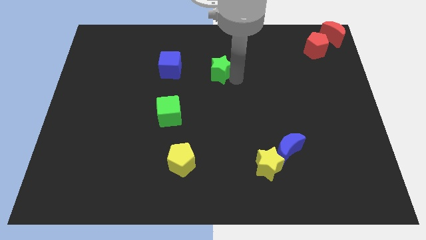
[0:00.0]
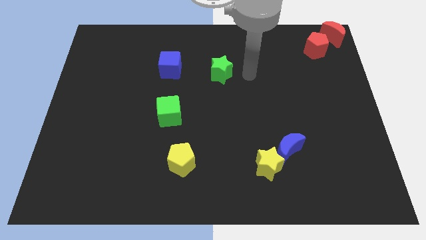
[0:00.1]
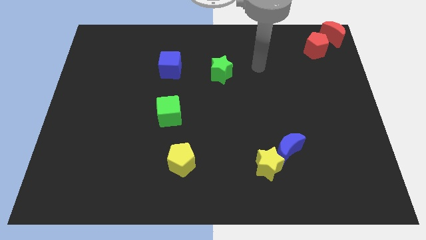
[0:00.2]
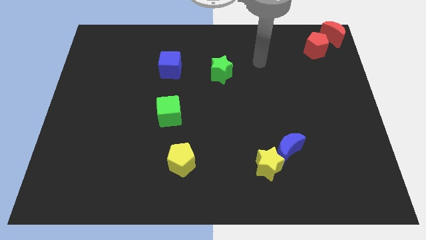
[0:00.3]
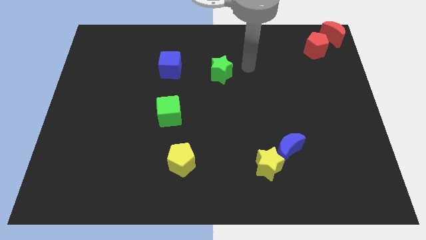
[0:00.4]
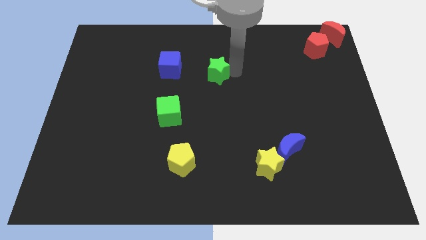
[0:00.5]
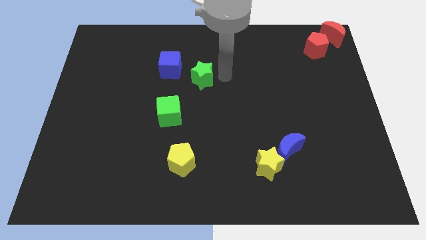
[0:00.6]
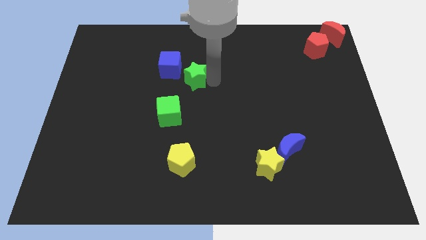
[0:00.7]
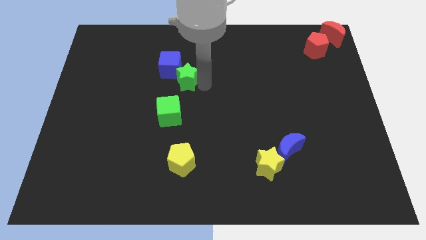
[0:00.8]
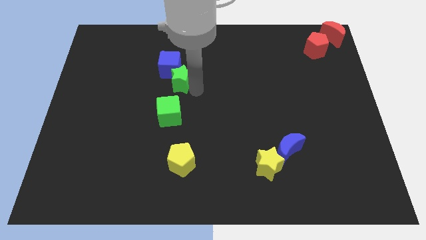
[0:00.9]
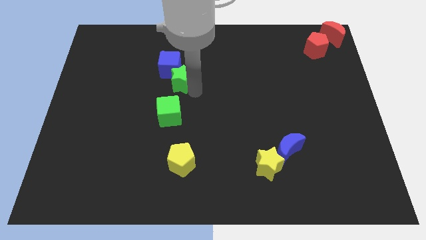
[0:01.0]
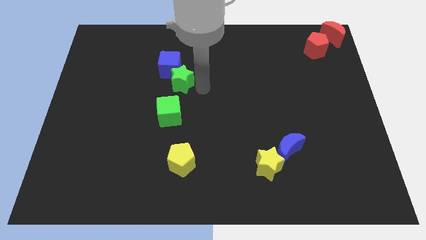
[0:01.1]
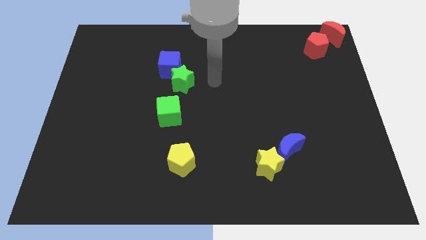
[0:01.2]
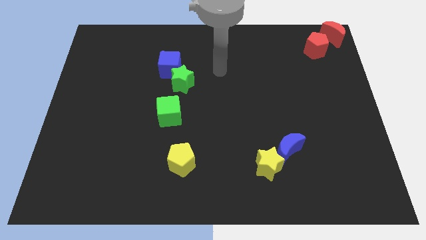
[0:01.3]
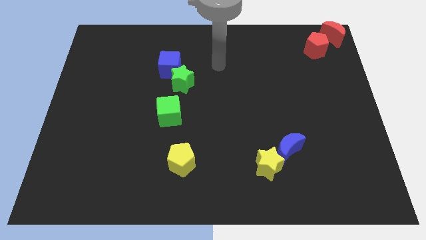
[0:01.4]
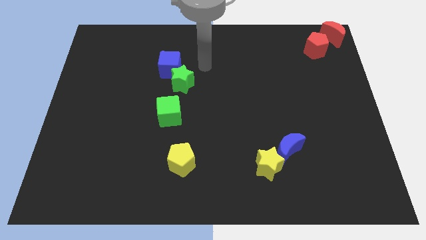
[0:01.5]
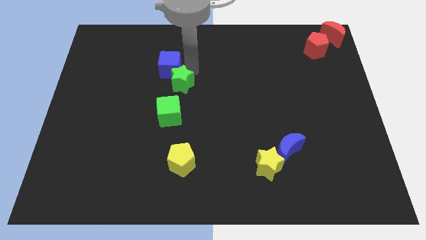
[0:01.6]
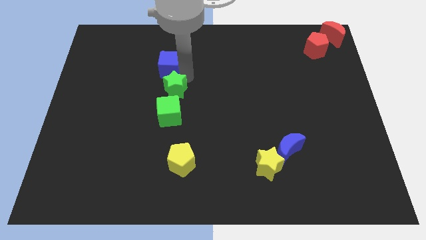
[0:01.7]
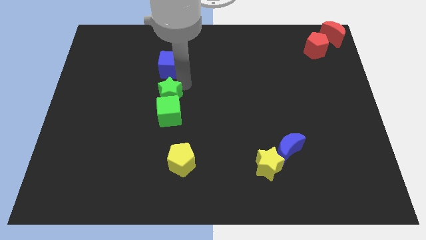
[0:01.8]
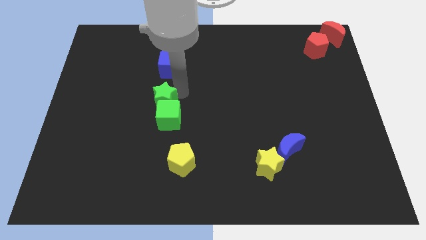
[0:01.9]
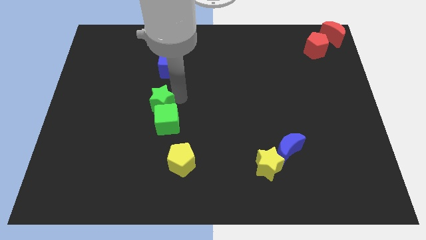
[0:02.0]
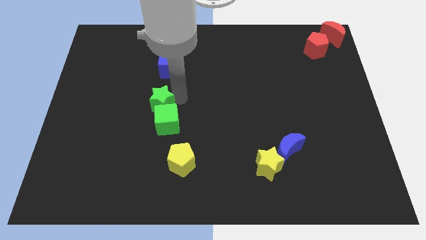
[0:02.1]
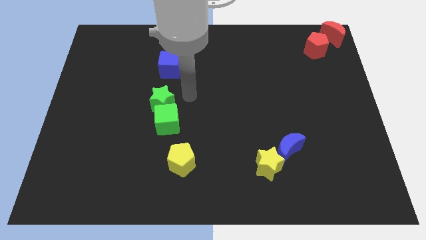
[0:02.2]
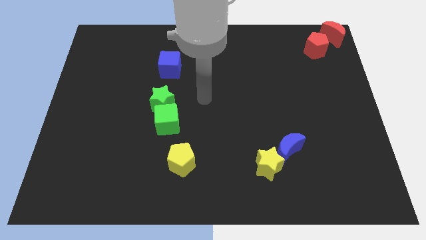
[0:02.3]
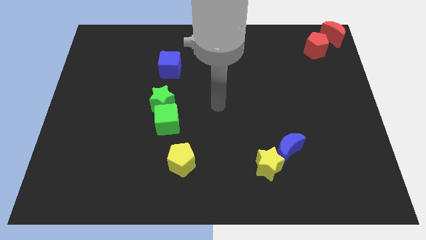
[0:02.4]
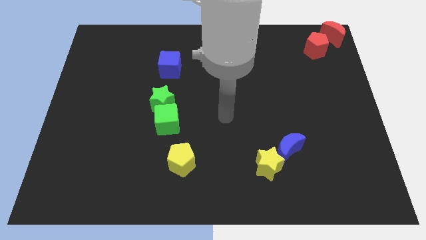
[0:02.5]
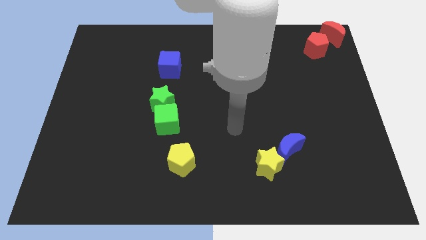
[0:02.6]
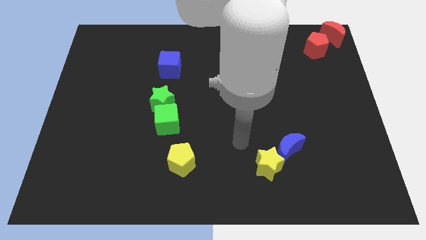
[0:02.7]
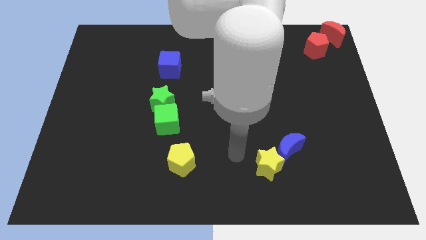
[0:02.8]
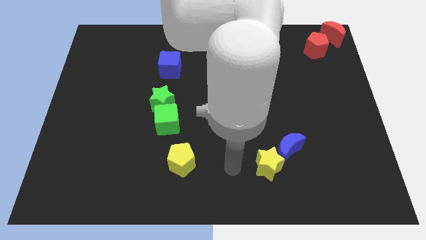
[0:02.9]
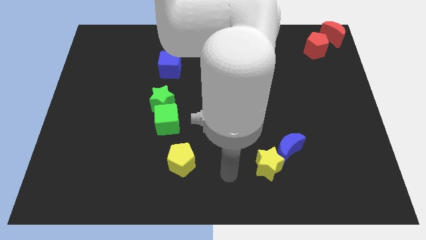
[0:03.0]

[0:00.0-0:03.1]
push the green star to the top of the green cube

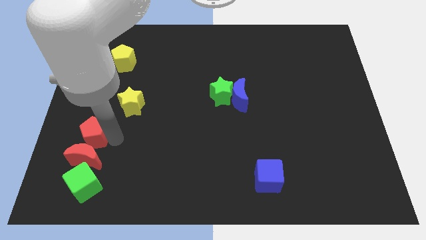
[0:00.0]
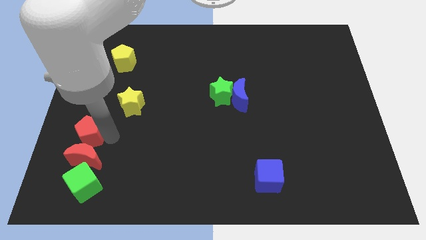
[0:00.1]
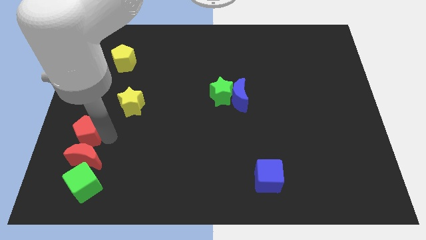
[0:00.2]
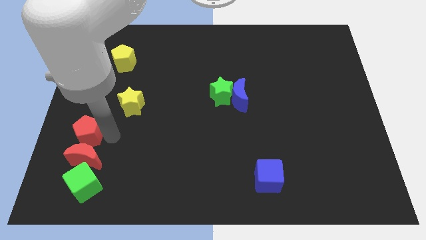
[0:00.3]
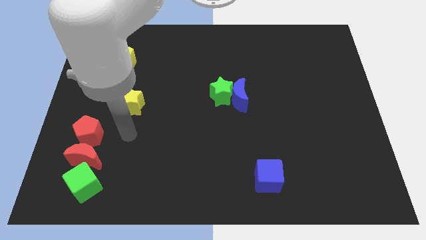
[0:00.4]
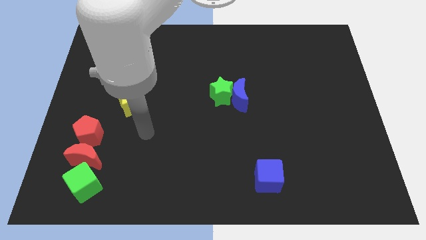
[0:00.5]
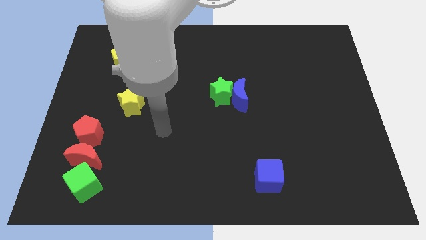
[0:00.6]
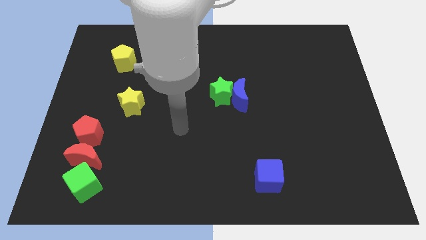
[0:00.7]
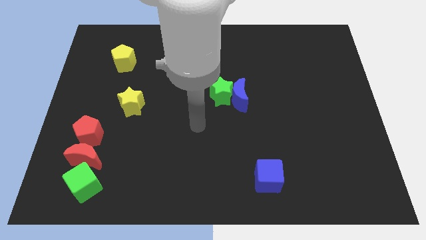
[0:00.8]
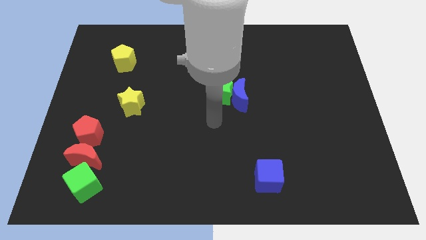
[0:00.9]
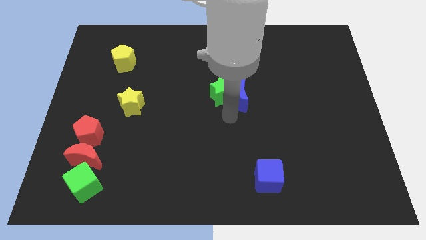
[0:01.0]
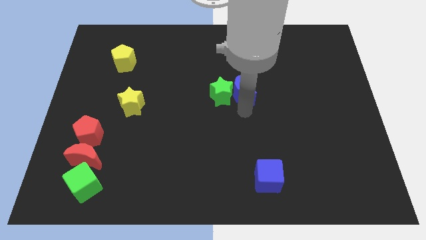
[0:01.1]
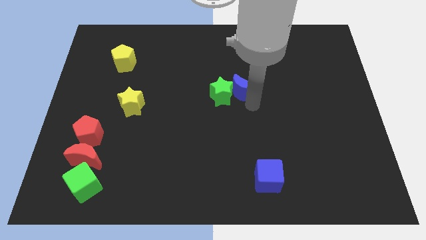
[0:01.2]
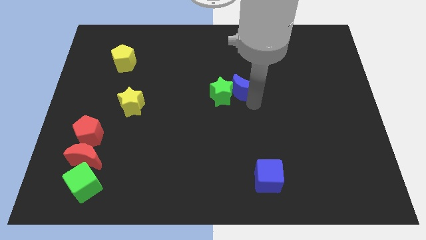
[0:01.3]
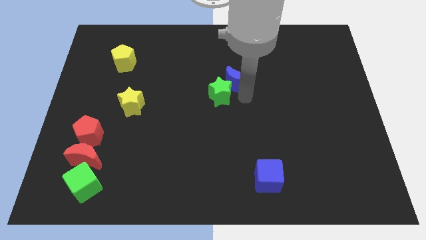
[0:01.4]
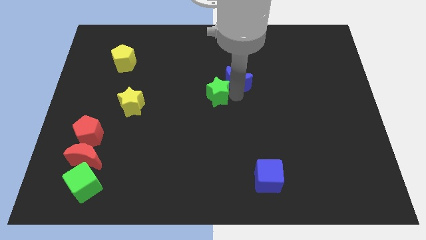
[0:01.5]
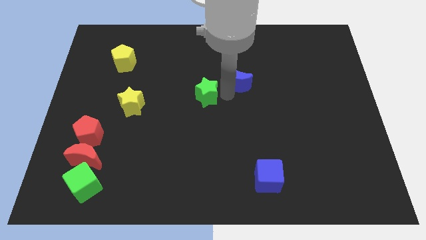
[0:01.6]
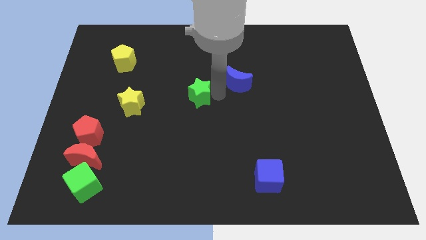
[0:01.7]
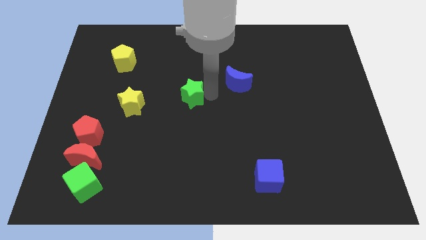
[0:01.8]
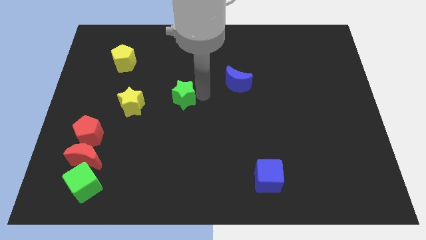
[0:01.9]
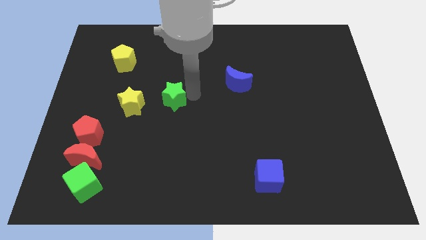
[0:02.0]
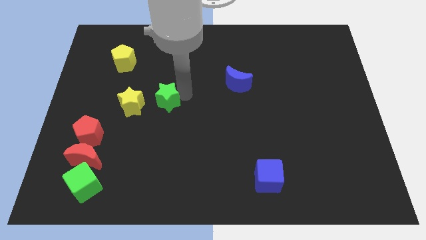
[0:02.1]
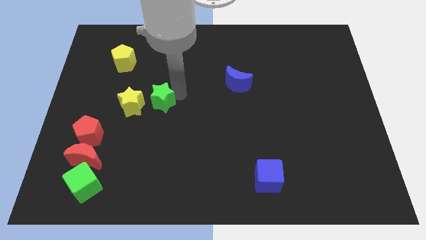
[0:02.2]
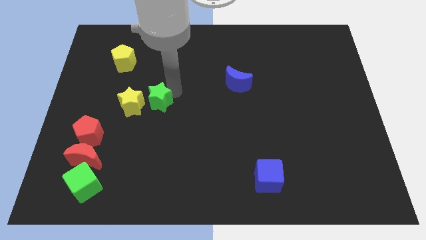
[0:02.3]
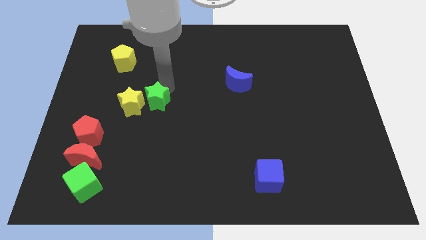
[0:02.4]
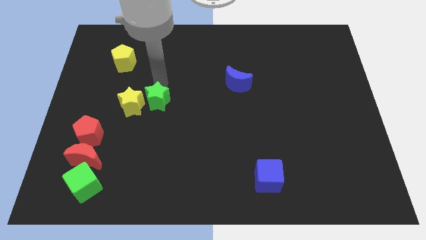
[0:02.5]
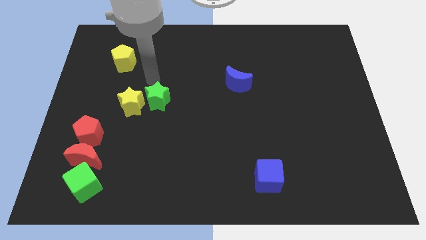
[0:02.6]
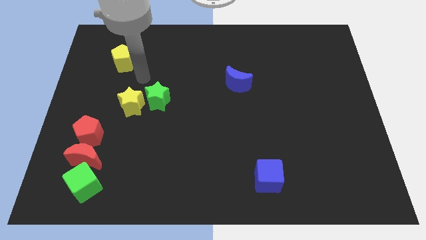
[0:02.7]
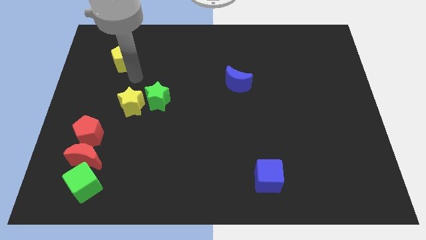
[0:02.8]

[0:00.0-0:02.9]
place the green star below the yellow pentagon

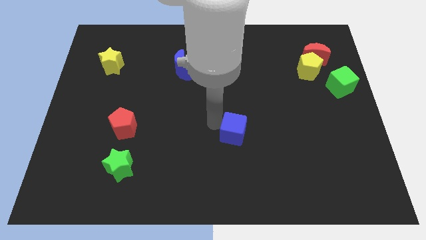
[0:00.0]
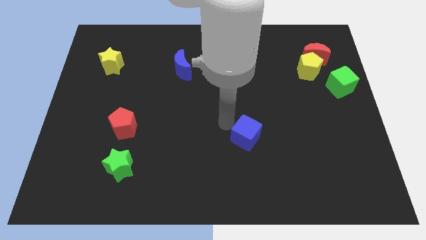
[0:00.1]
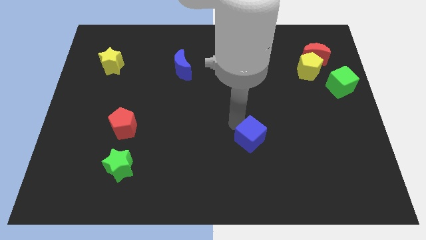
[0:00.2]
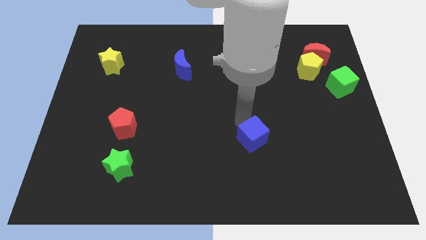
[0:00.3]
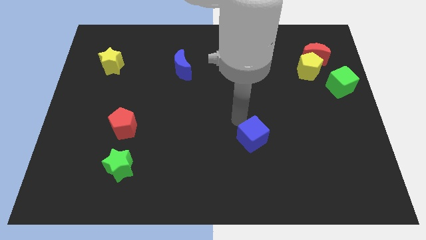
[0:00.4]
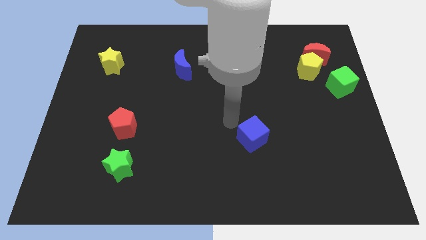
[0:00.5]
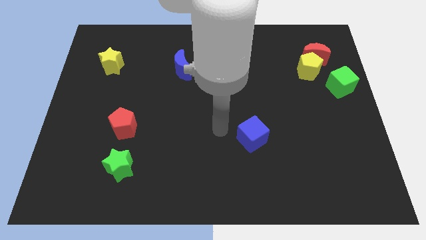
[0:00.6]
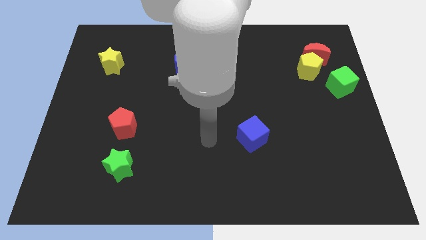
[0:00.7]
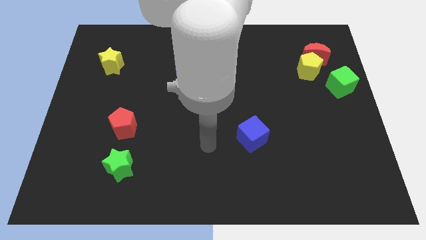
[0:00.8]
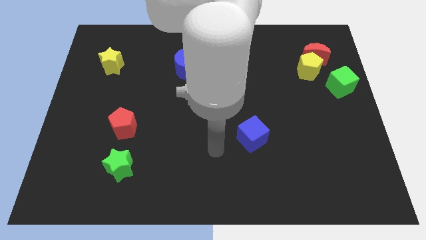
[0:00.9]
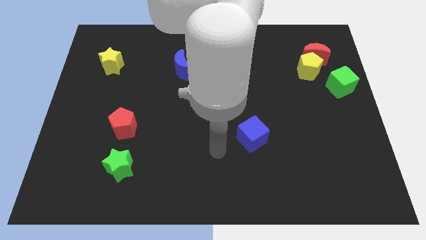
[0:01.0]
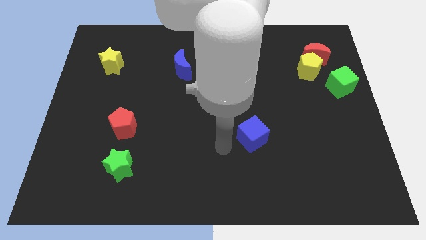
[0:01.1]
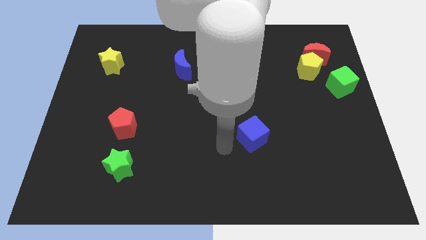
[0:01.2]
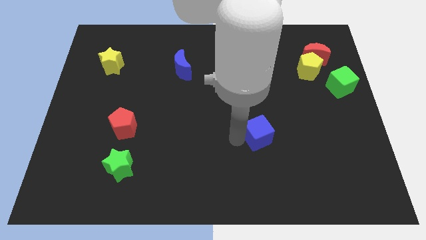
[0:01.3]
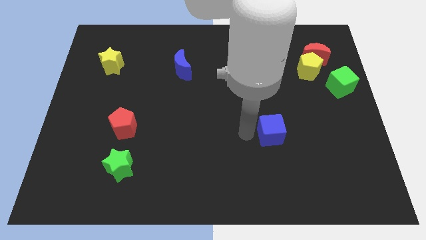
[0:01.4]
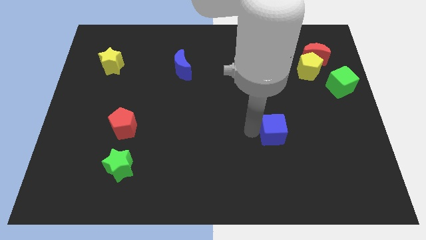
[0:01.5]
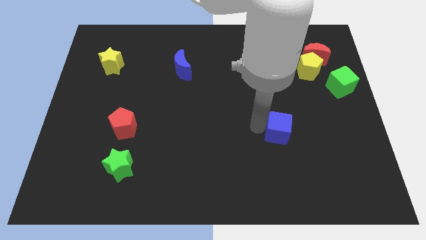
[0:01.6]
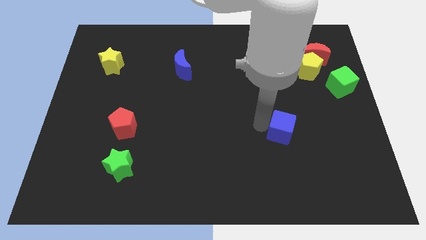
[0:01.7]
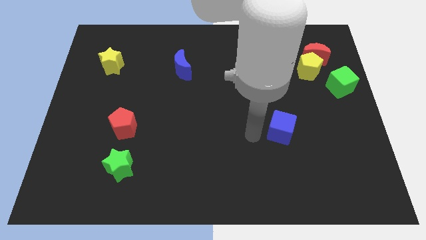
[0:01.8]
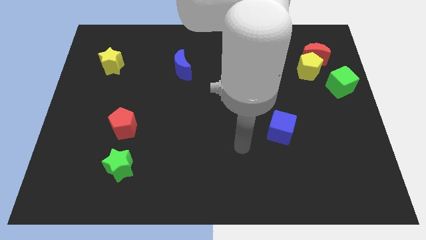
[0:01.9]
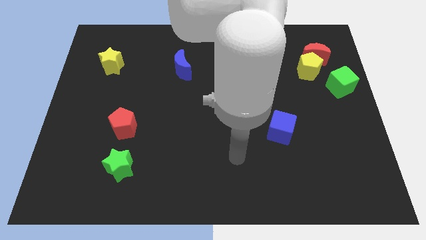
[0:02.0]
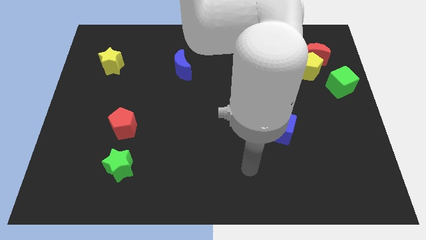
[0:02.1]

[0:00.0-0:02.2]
slightly push the blue cube to the right

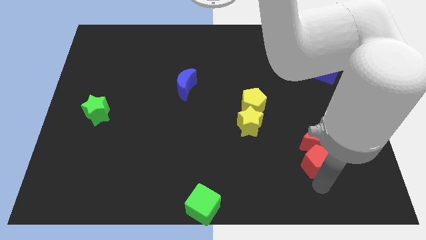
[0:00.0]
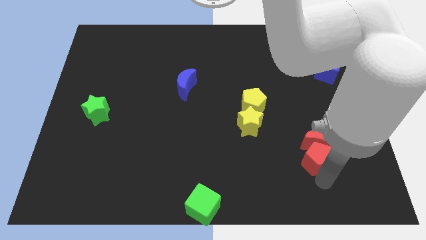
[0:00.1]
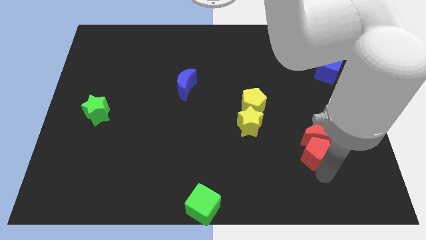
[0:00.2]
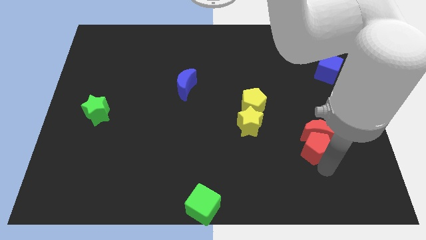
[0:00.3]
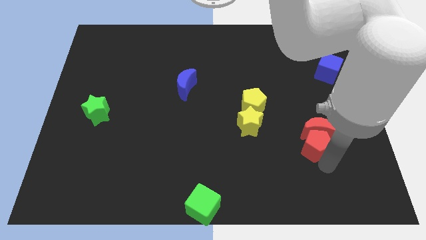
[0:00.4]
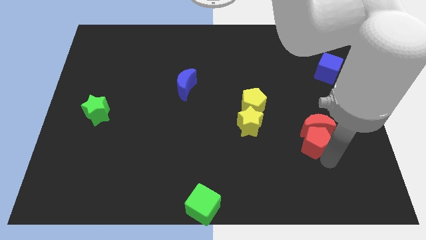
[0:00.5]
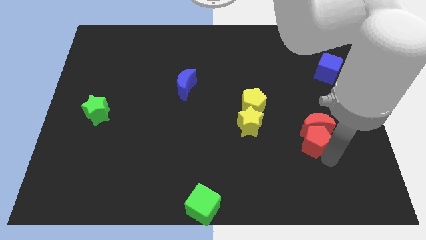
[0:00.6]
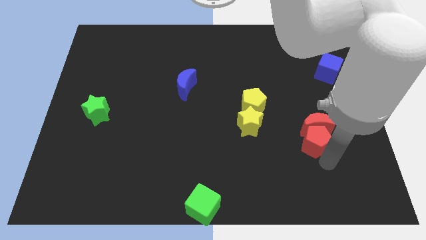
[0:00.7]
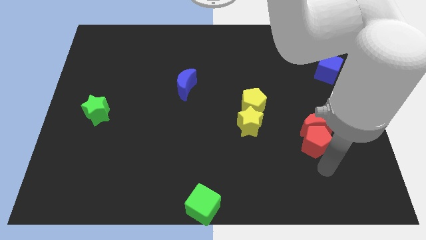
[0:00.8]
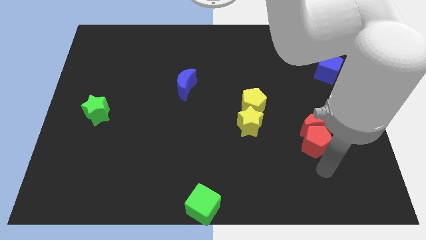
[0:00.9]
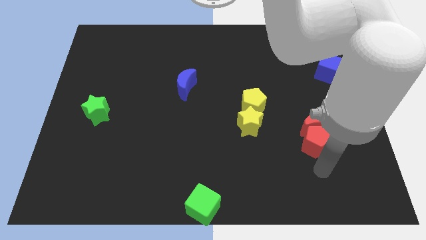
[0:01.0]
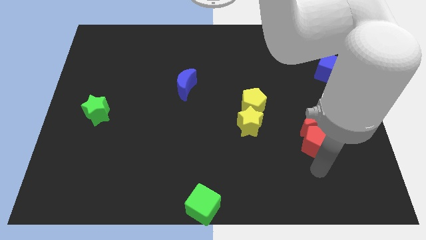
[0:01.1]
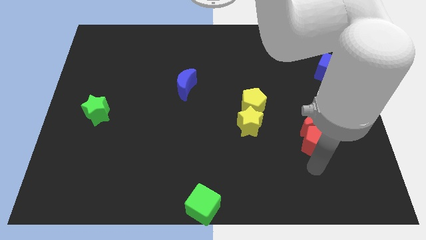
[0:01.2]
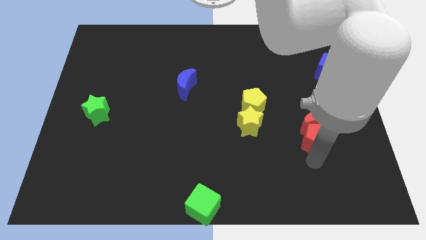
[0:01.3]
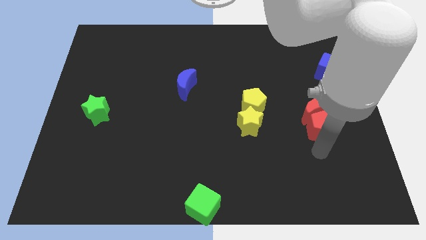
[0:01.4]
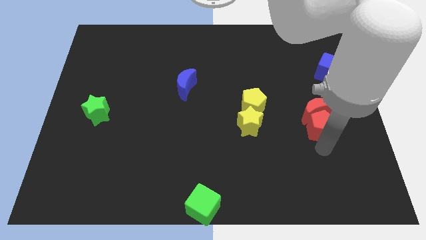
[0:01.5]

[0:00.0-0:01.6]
place the red pentagon parallel right to the yellow star
